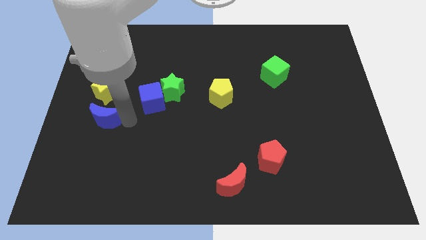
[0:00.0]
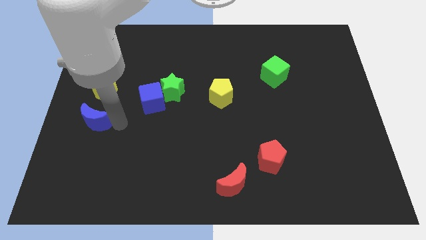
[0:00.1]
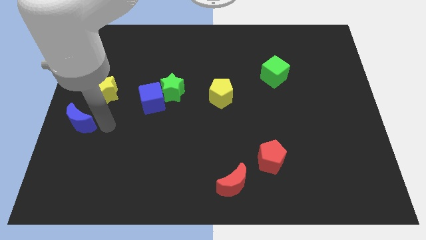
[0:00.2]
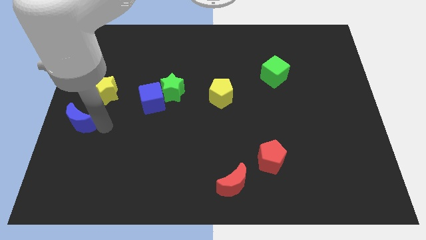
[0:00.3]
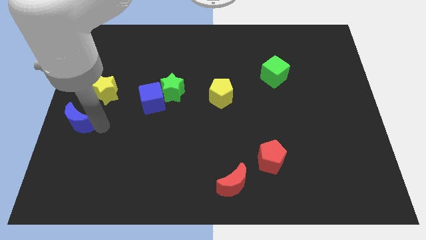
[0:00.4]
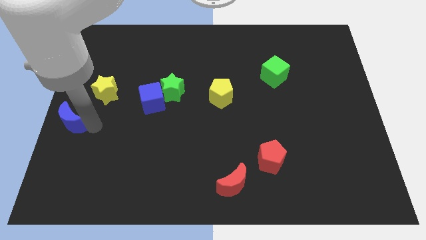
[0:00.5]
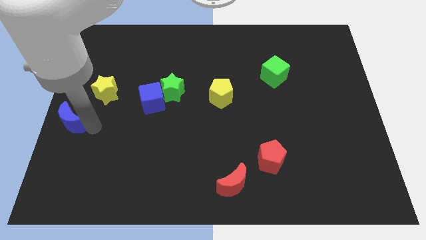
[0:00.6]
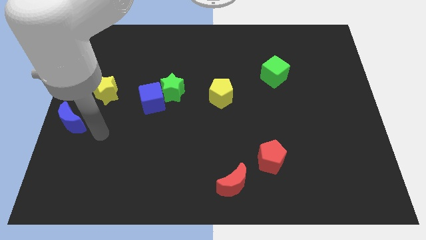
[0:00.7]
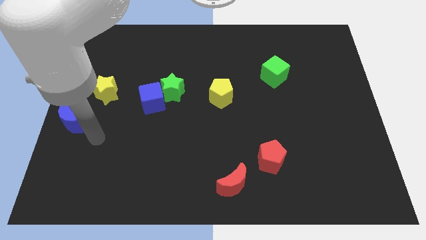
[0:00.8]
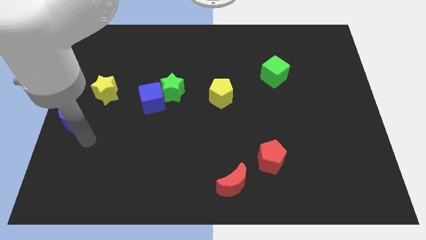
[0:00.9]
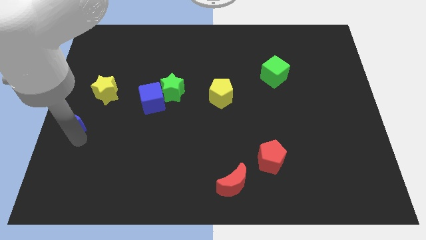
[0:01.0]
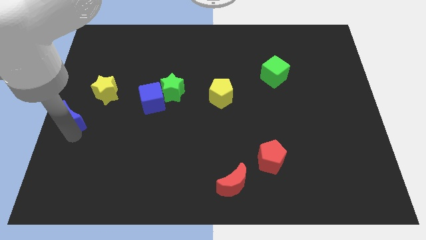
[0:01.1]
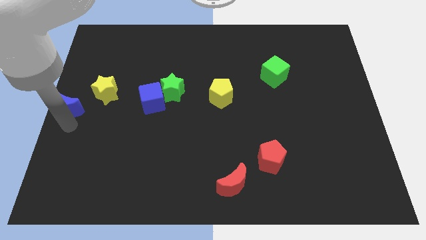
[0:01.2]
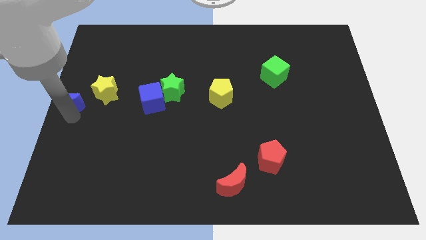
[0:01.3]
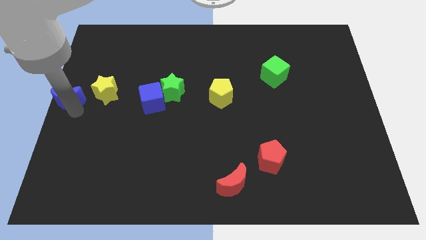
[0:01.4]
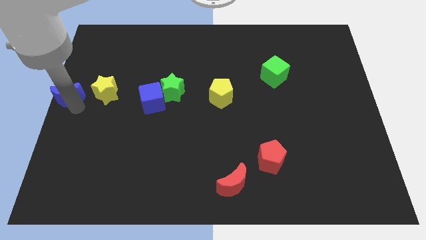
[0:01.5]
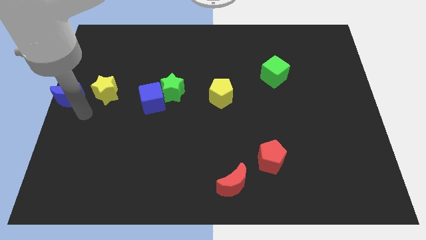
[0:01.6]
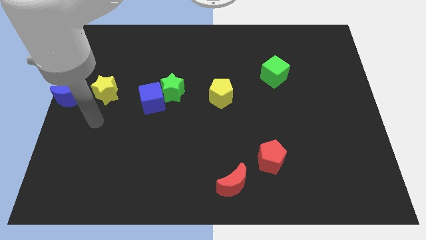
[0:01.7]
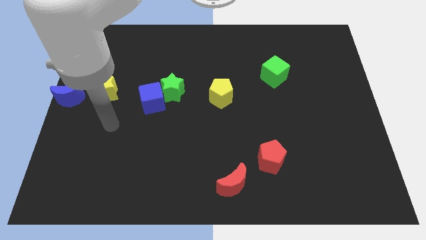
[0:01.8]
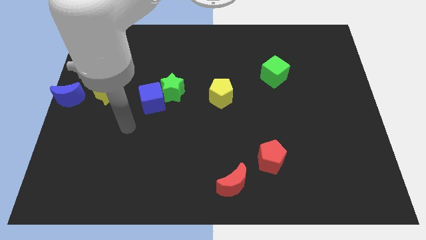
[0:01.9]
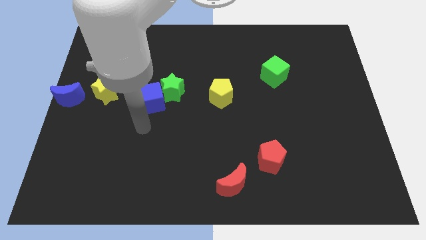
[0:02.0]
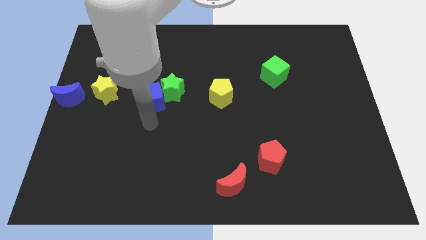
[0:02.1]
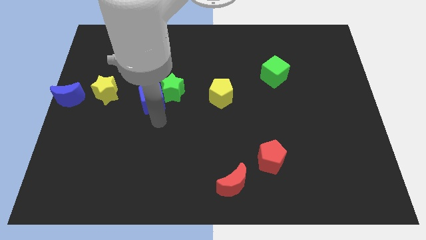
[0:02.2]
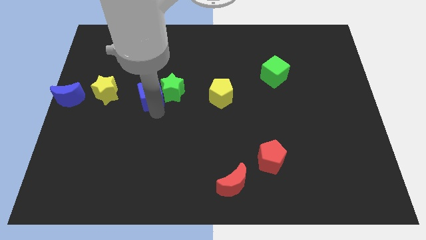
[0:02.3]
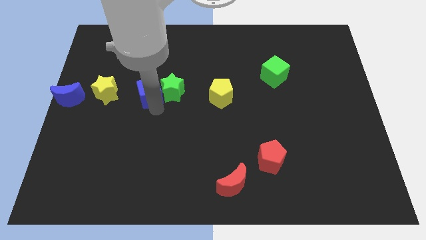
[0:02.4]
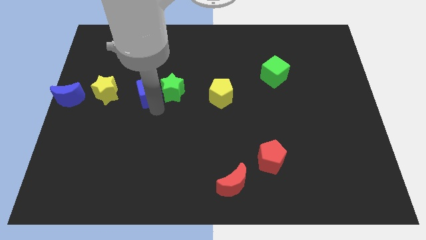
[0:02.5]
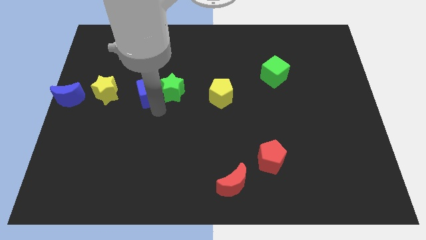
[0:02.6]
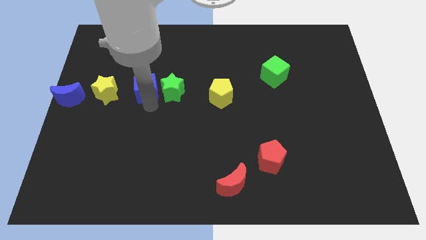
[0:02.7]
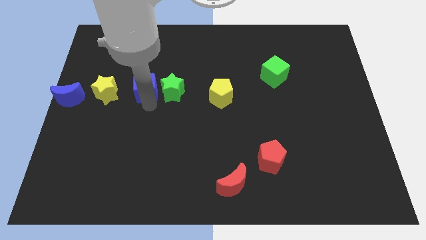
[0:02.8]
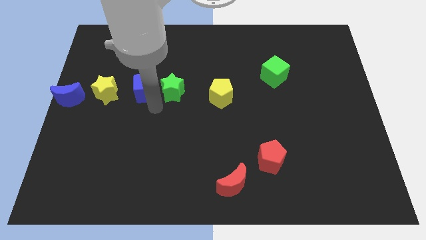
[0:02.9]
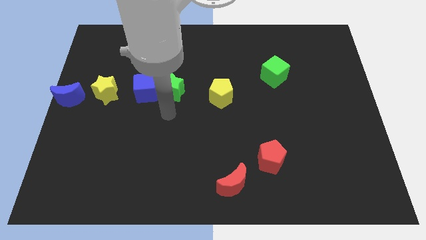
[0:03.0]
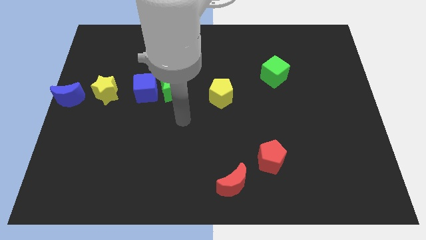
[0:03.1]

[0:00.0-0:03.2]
slide the blue blocks slightly upwards

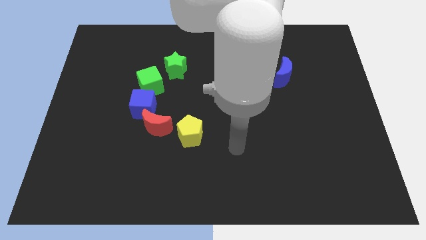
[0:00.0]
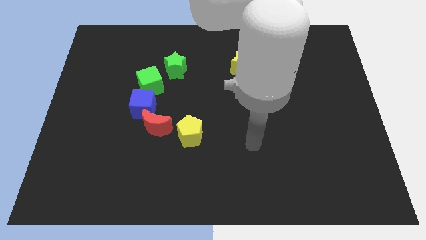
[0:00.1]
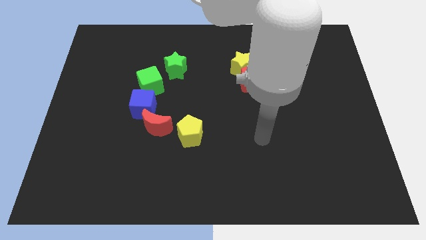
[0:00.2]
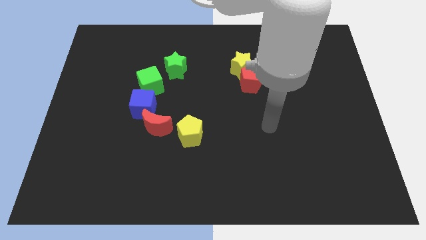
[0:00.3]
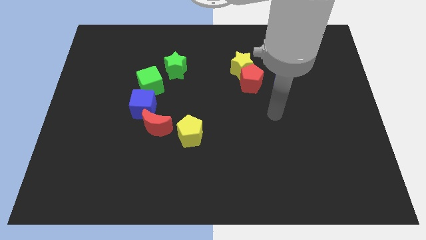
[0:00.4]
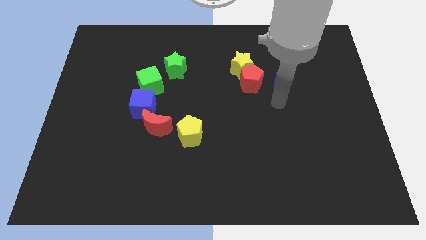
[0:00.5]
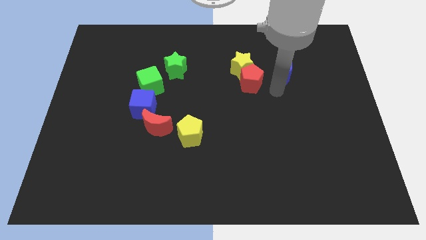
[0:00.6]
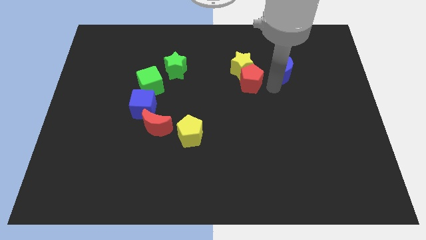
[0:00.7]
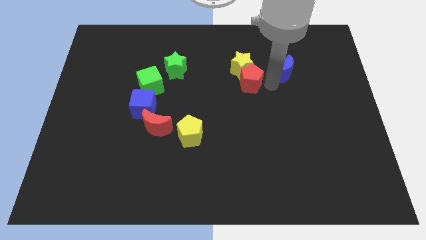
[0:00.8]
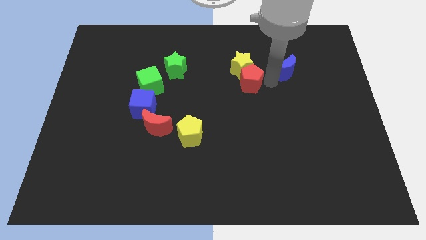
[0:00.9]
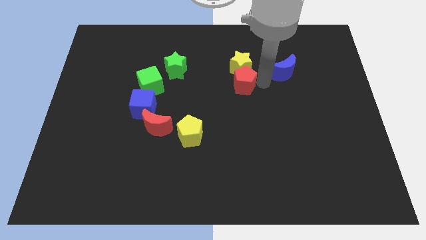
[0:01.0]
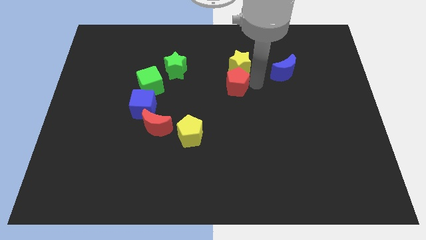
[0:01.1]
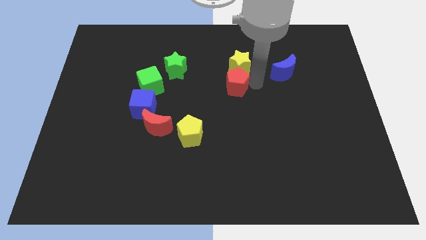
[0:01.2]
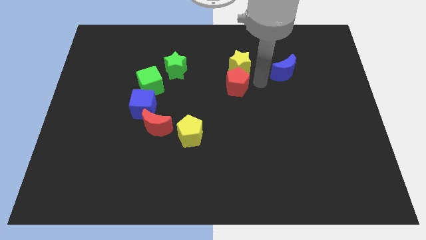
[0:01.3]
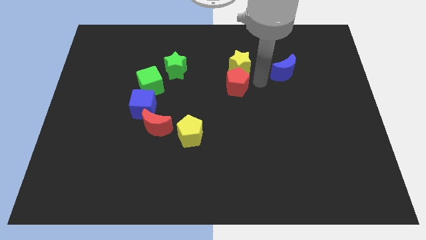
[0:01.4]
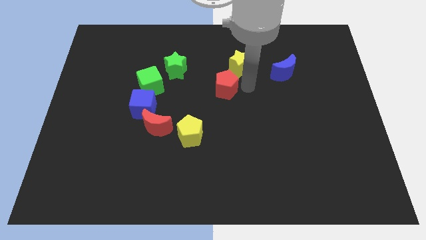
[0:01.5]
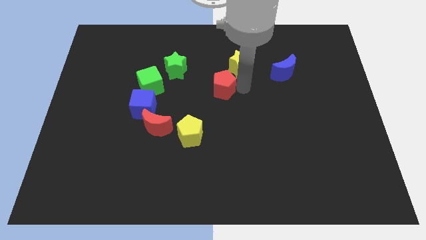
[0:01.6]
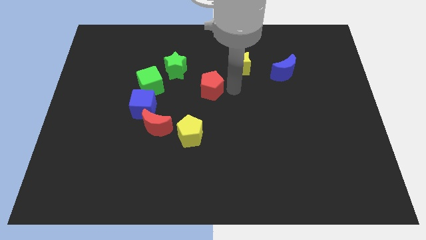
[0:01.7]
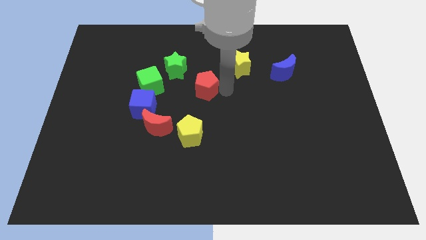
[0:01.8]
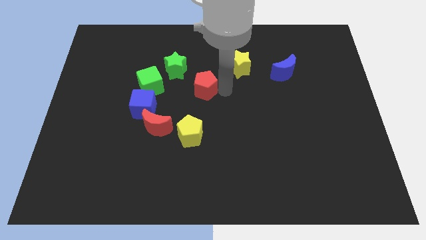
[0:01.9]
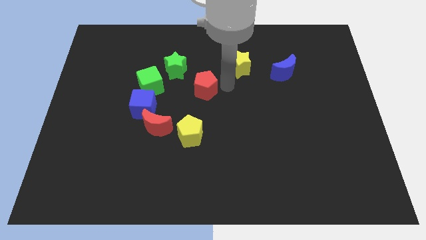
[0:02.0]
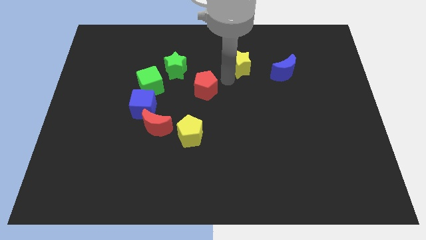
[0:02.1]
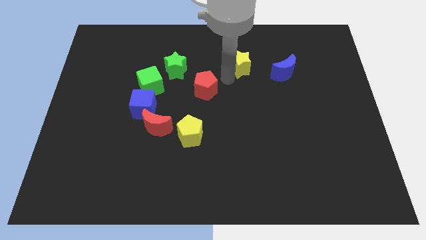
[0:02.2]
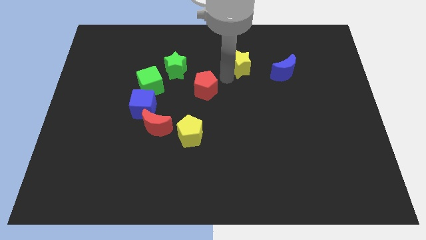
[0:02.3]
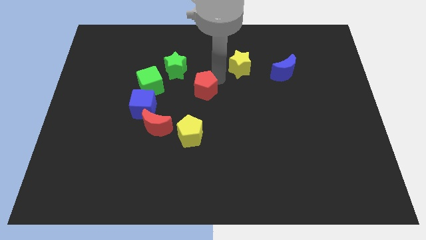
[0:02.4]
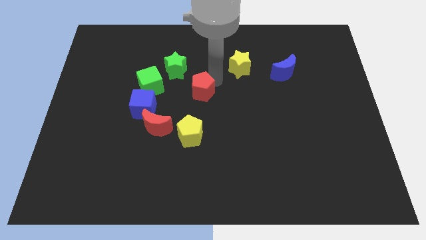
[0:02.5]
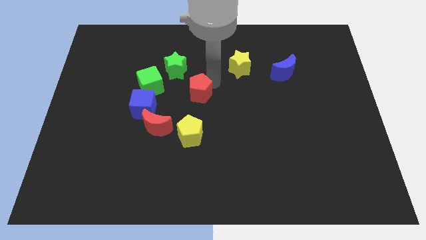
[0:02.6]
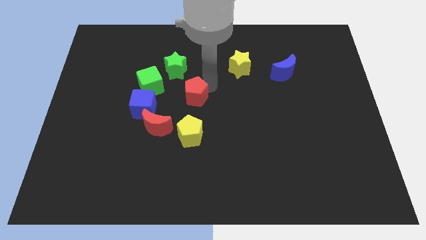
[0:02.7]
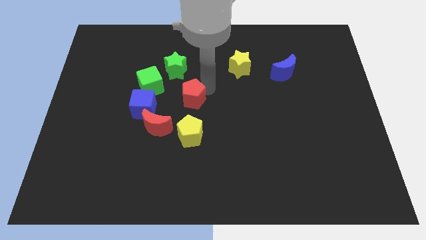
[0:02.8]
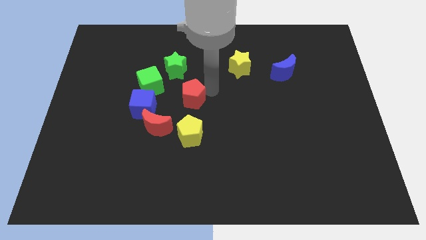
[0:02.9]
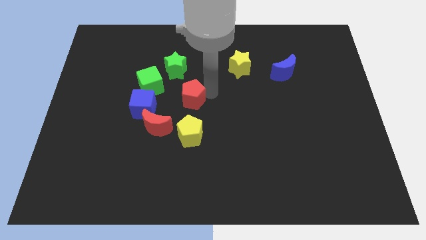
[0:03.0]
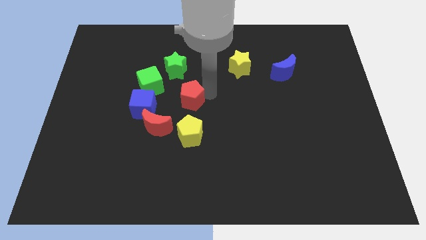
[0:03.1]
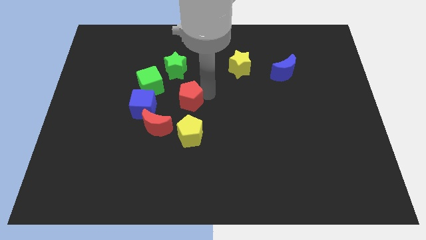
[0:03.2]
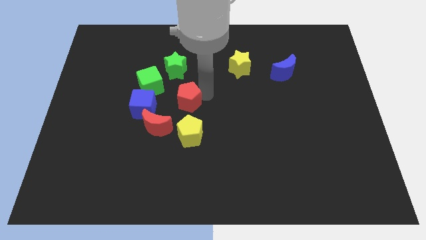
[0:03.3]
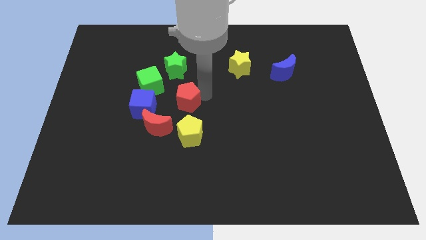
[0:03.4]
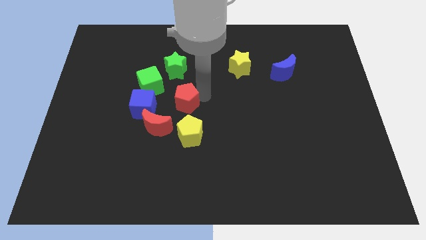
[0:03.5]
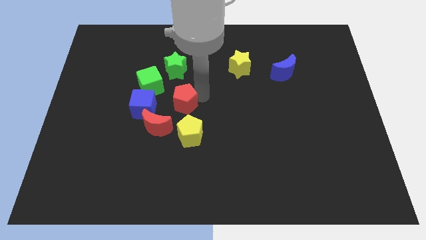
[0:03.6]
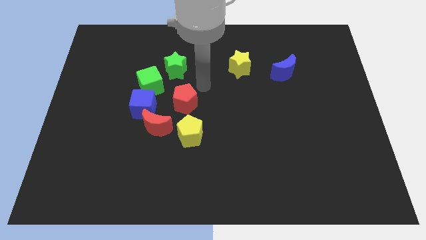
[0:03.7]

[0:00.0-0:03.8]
place the red pentagon diagonally in between the green star and the yellow pentagon

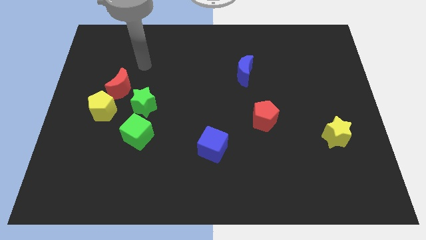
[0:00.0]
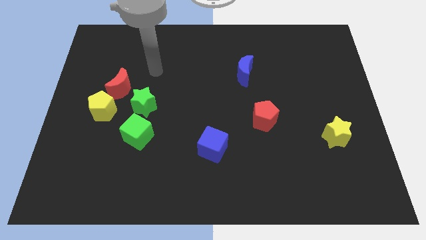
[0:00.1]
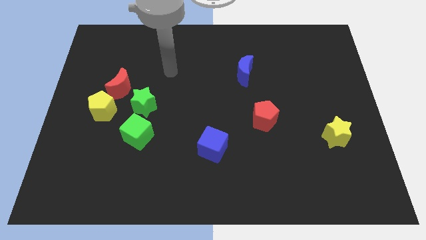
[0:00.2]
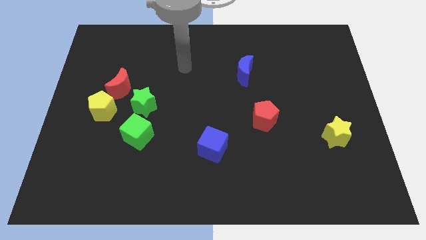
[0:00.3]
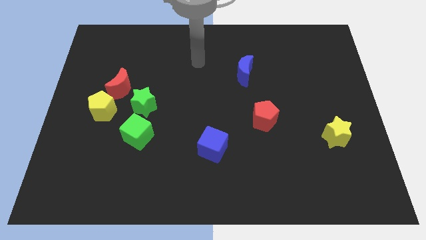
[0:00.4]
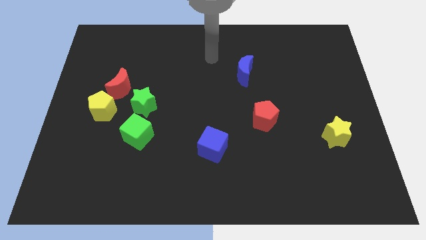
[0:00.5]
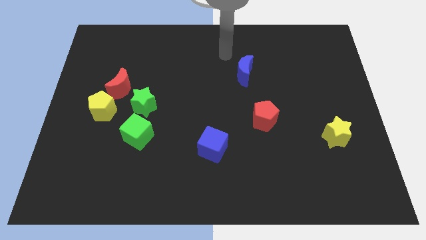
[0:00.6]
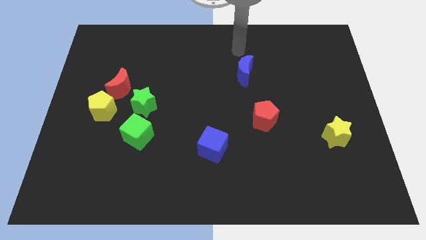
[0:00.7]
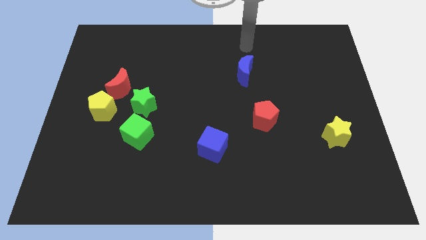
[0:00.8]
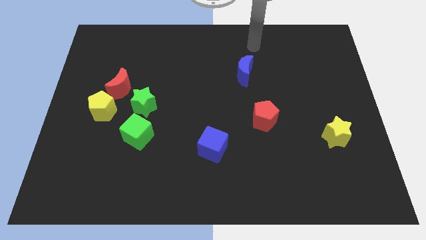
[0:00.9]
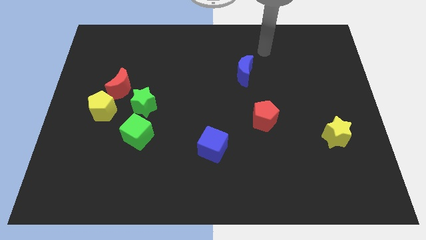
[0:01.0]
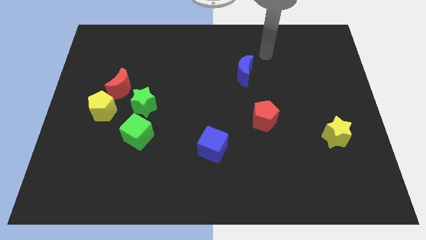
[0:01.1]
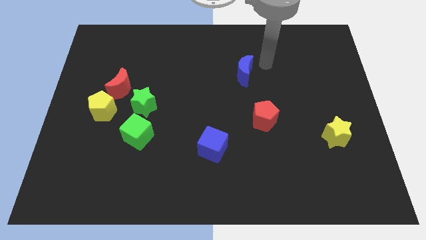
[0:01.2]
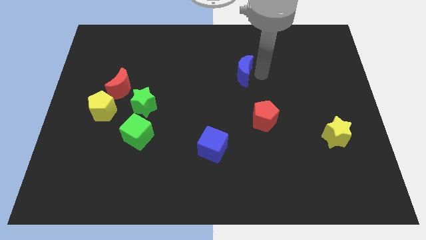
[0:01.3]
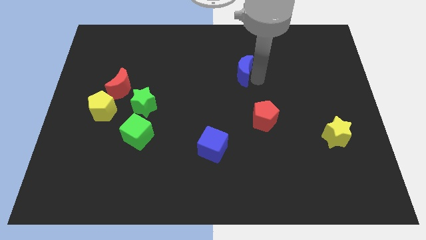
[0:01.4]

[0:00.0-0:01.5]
go and point your hand at the right side of the blue crescent

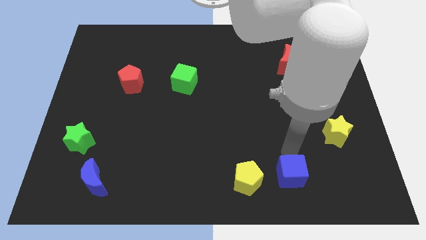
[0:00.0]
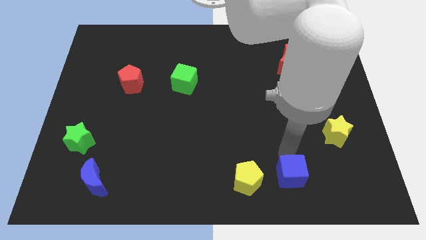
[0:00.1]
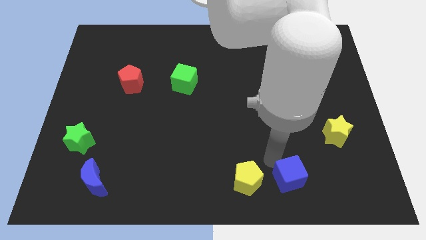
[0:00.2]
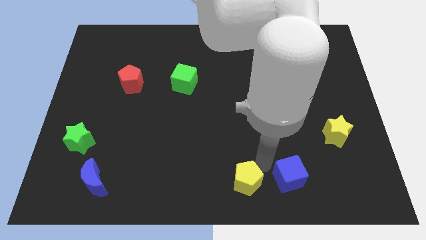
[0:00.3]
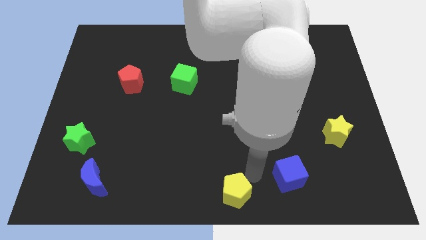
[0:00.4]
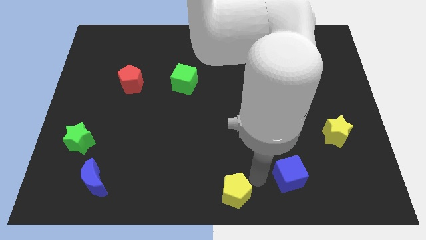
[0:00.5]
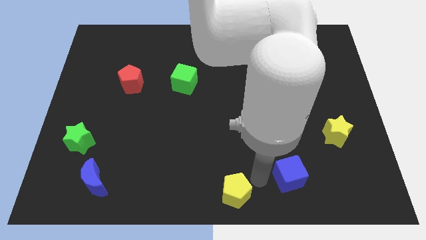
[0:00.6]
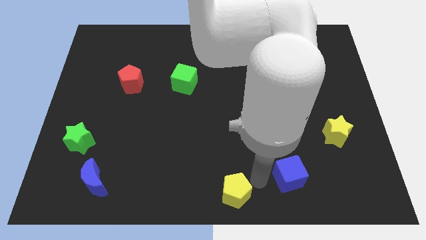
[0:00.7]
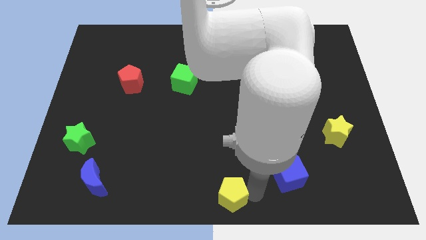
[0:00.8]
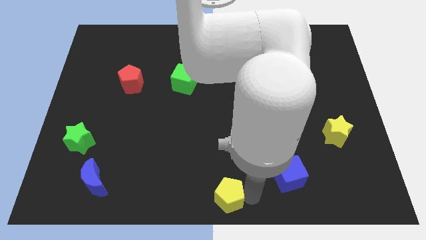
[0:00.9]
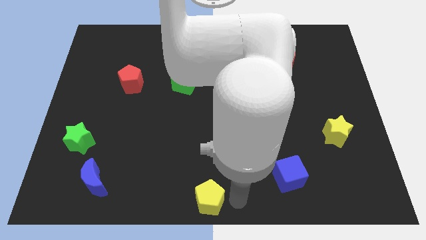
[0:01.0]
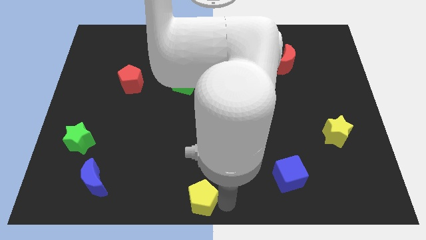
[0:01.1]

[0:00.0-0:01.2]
move the yellow pentagon to the bottom center of the board
